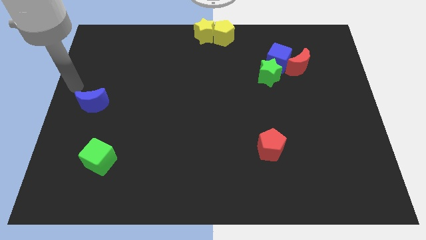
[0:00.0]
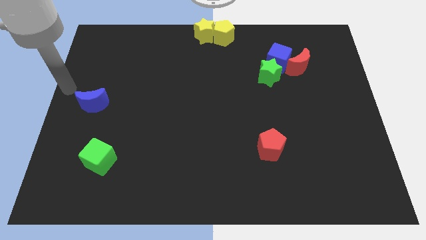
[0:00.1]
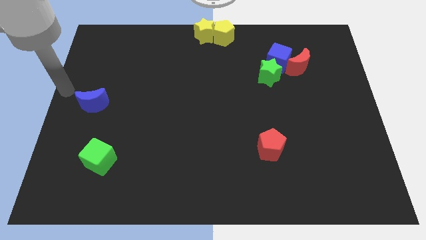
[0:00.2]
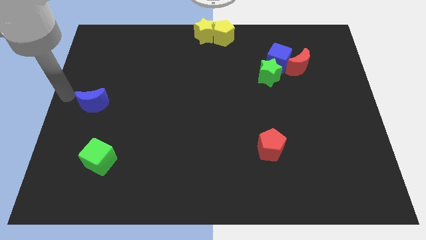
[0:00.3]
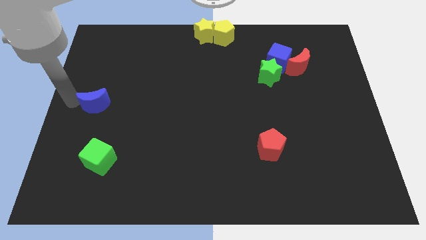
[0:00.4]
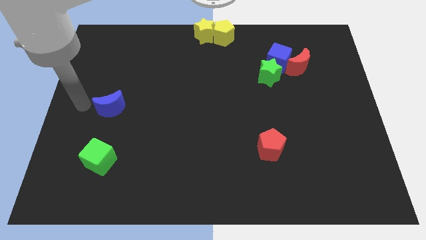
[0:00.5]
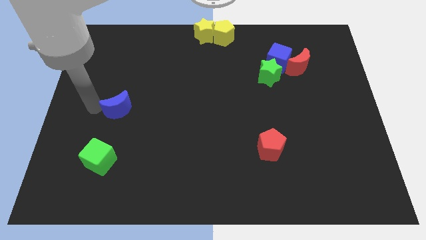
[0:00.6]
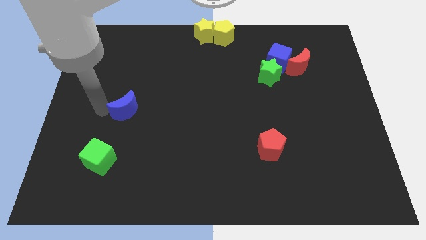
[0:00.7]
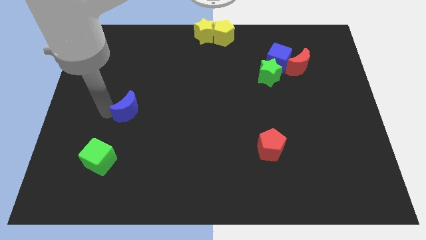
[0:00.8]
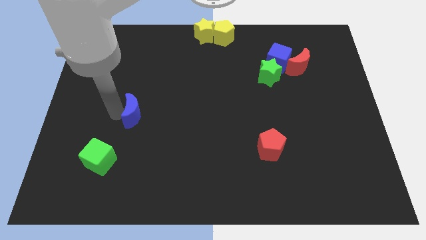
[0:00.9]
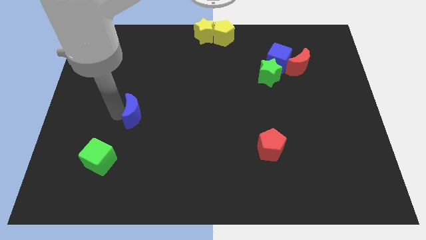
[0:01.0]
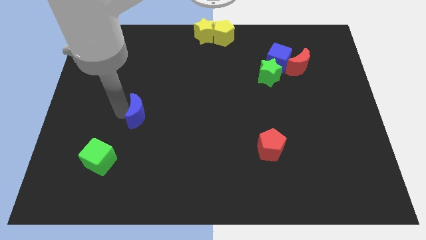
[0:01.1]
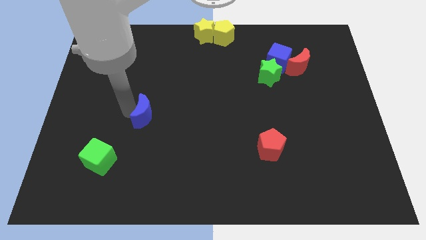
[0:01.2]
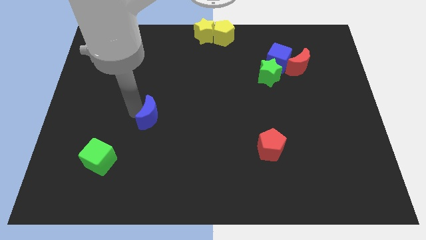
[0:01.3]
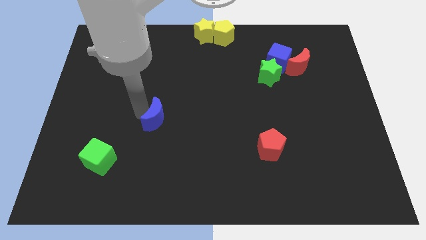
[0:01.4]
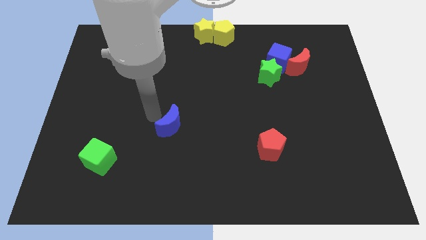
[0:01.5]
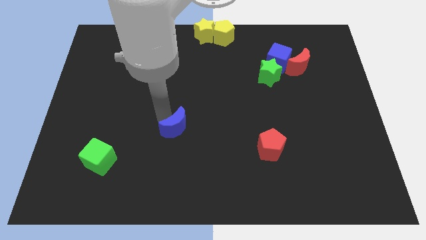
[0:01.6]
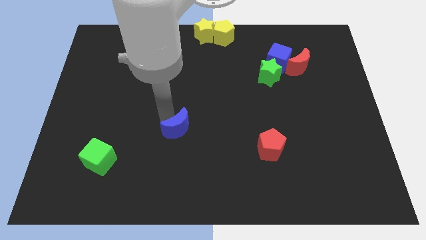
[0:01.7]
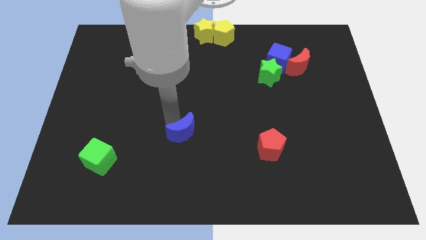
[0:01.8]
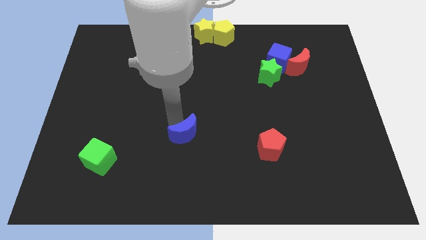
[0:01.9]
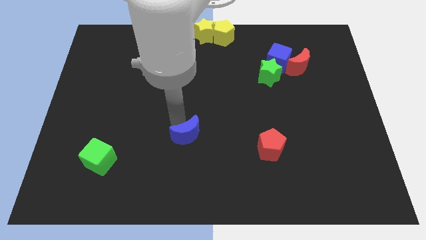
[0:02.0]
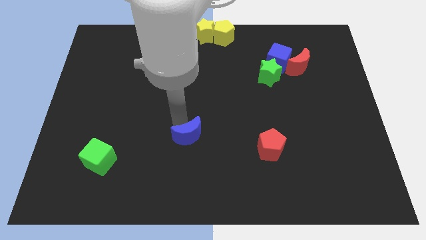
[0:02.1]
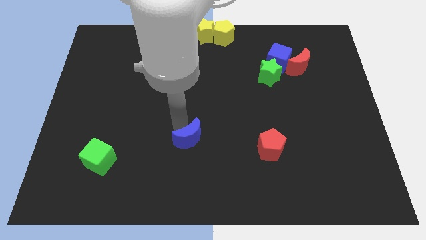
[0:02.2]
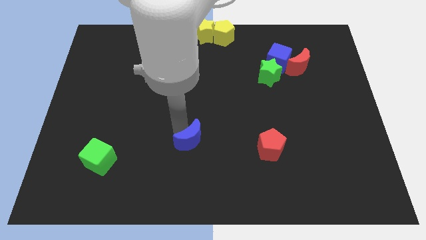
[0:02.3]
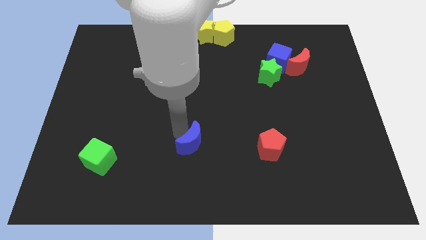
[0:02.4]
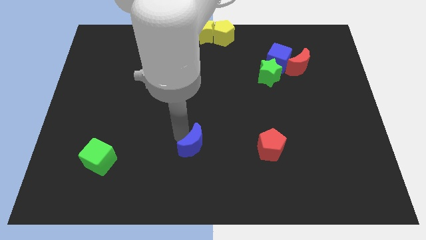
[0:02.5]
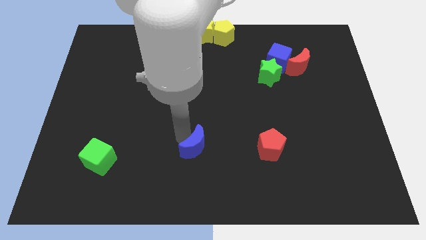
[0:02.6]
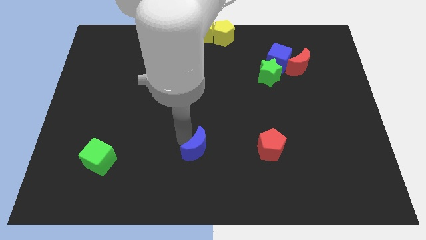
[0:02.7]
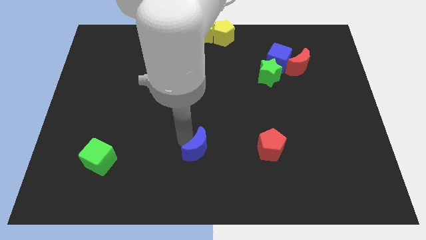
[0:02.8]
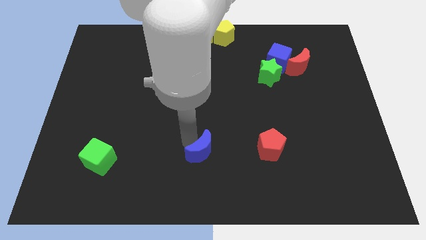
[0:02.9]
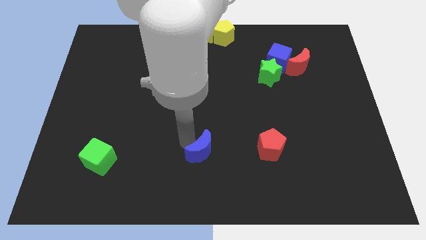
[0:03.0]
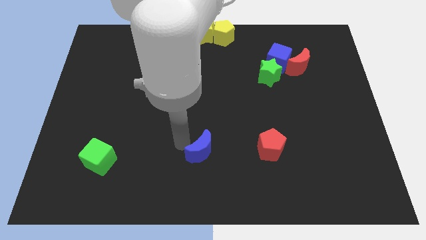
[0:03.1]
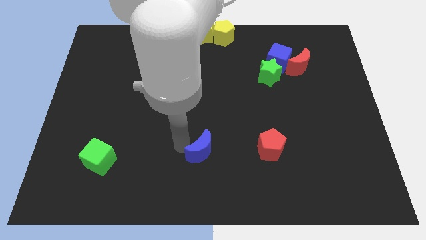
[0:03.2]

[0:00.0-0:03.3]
place blue crescent parallel left to red pentagon

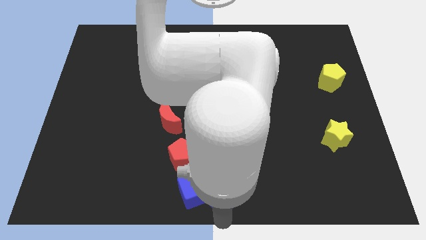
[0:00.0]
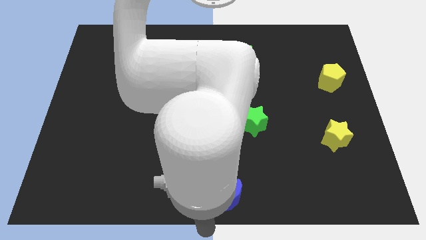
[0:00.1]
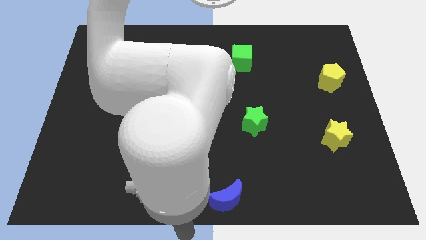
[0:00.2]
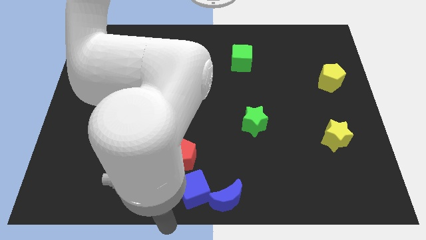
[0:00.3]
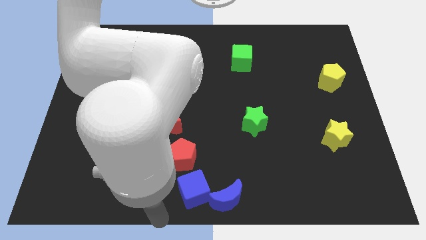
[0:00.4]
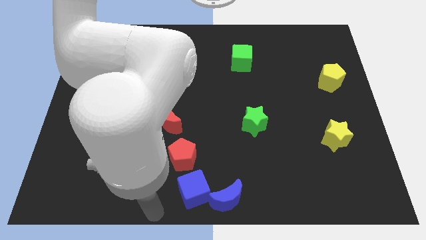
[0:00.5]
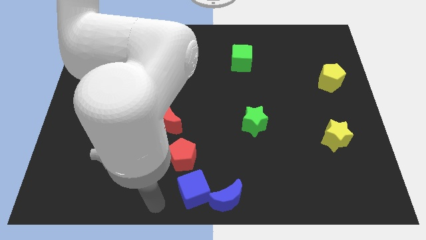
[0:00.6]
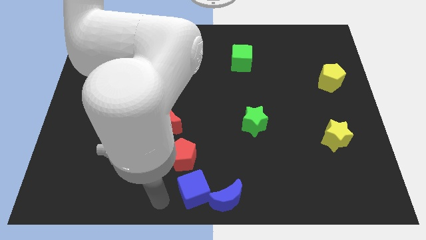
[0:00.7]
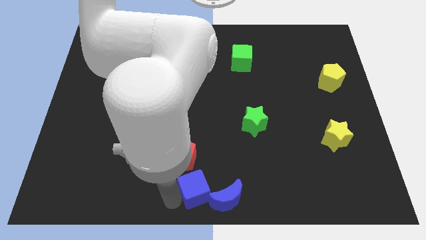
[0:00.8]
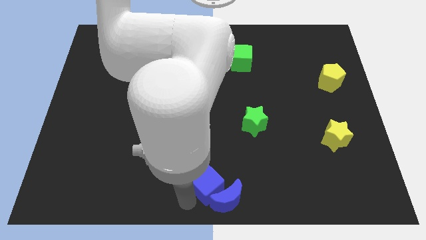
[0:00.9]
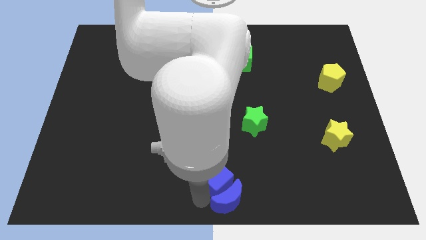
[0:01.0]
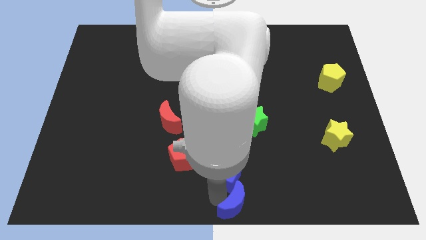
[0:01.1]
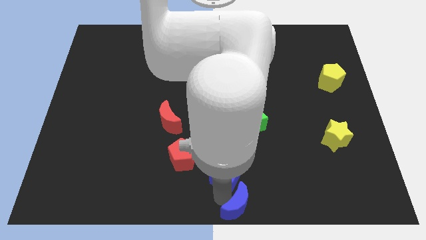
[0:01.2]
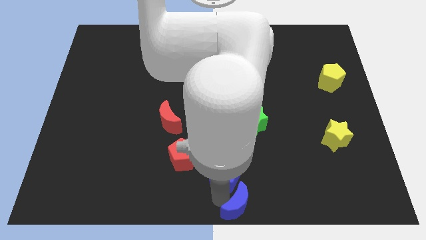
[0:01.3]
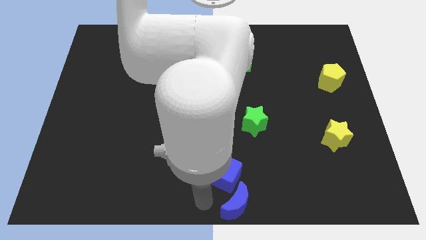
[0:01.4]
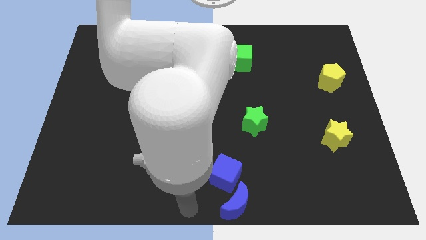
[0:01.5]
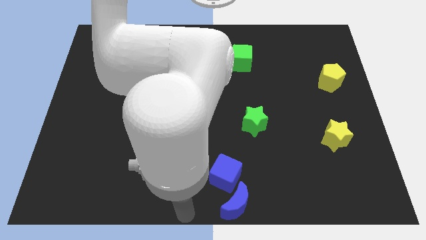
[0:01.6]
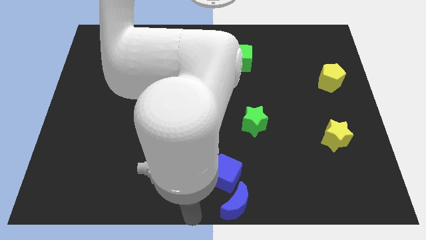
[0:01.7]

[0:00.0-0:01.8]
move the blue blocks to the center bottom

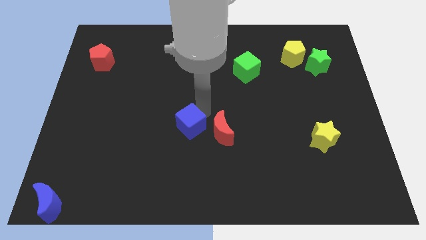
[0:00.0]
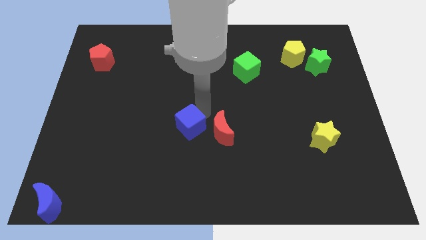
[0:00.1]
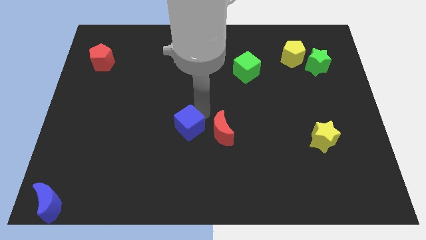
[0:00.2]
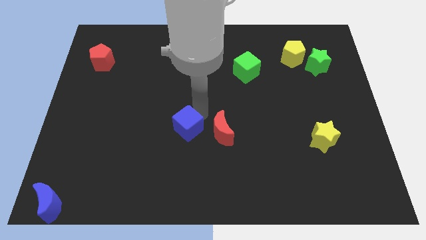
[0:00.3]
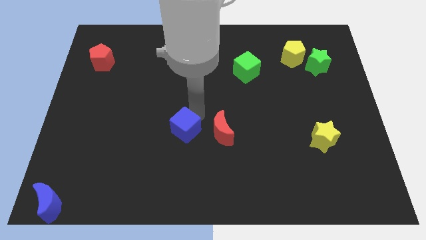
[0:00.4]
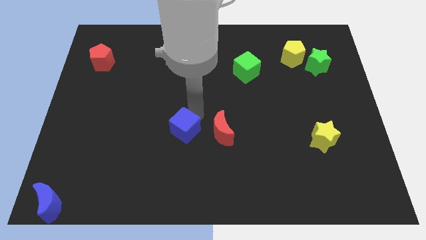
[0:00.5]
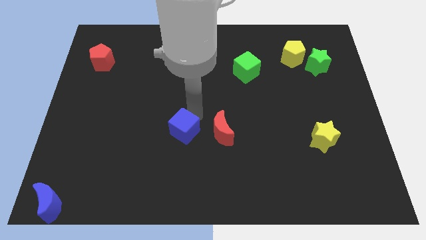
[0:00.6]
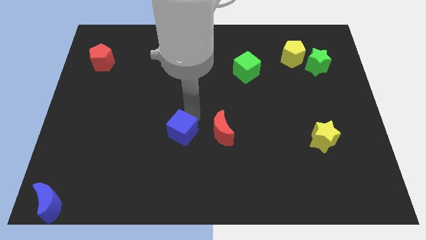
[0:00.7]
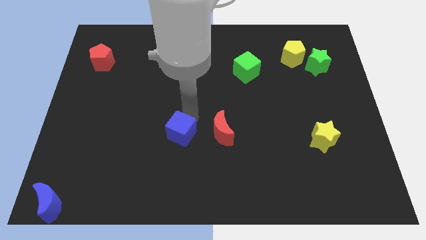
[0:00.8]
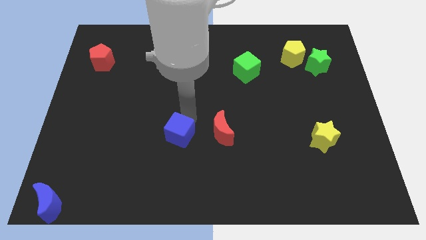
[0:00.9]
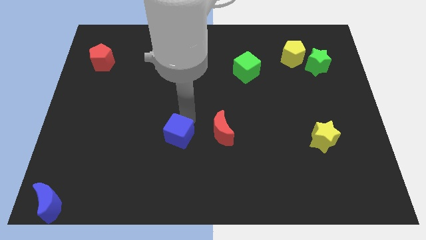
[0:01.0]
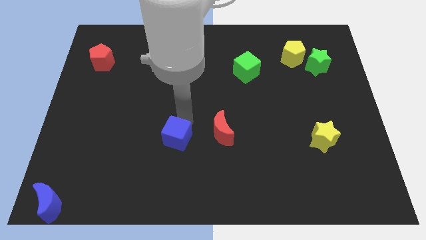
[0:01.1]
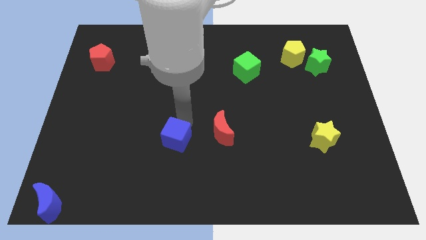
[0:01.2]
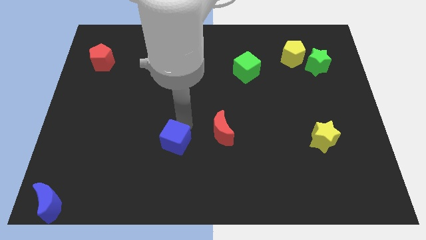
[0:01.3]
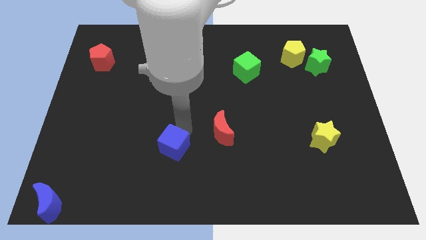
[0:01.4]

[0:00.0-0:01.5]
seperate blue cube and red moon

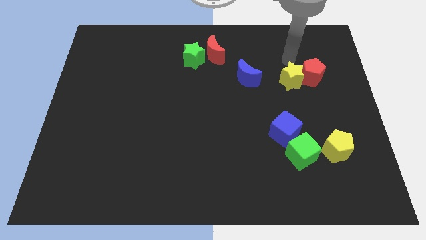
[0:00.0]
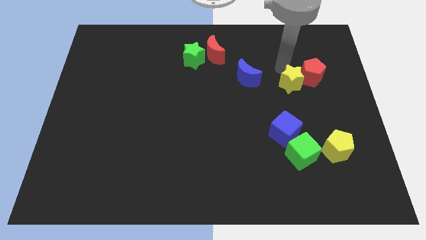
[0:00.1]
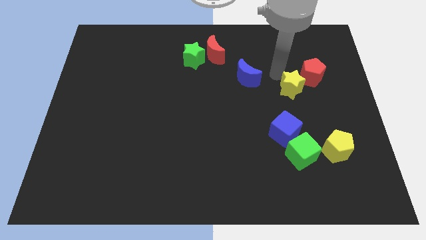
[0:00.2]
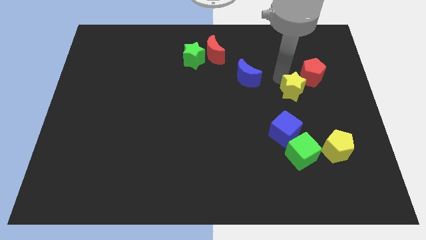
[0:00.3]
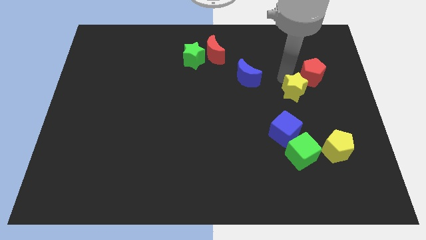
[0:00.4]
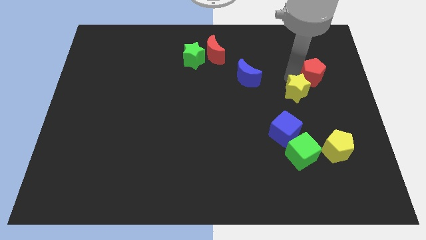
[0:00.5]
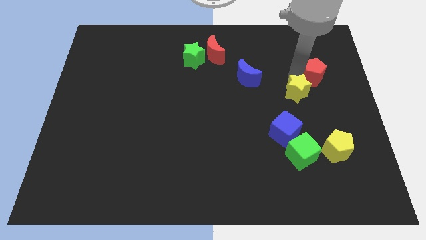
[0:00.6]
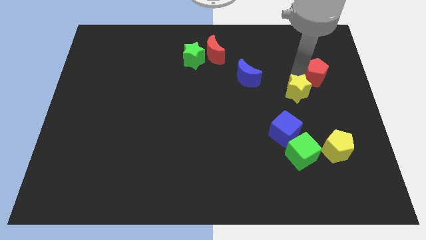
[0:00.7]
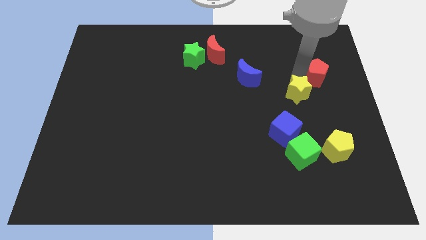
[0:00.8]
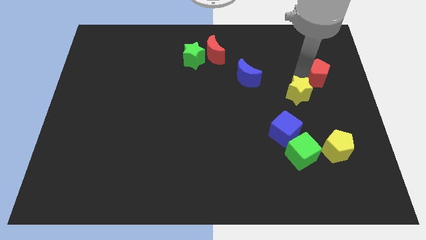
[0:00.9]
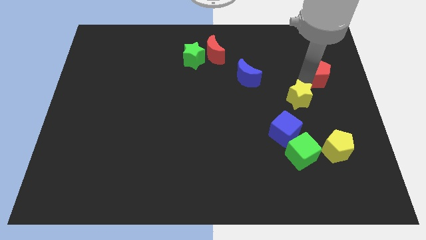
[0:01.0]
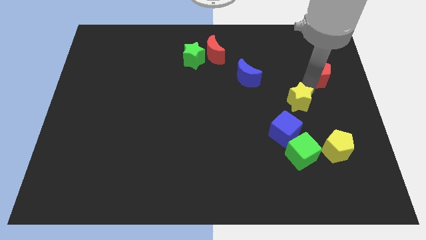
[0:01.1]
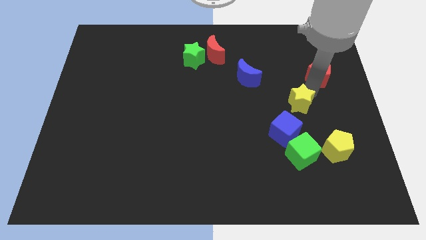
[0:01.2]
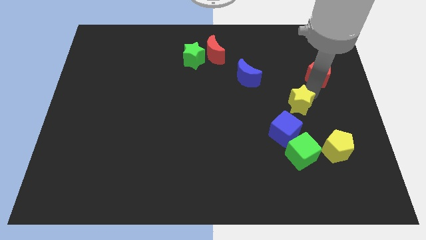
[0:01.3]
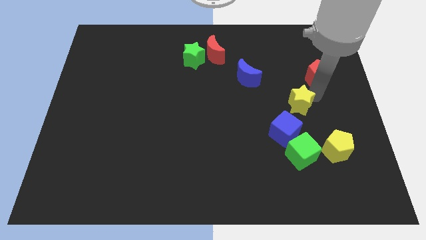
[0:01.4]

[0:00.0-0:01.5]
place yellow star between the red pentagon and blue cube

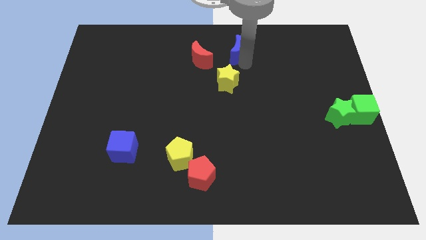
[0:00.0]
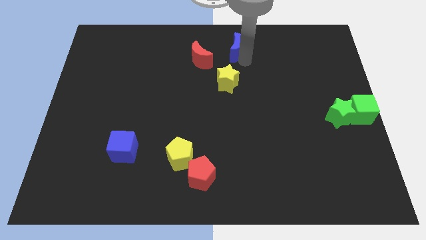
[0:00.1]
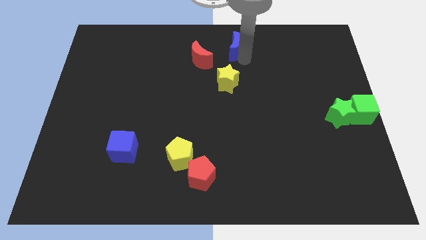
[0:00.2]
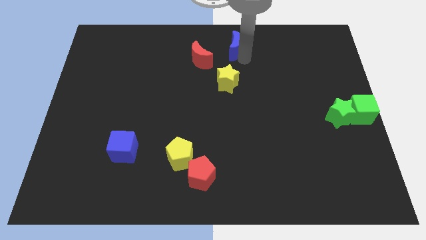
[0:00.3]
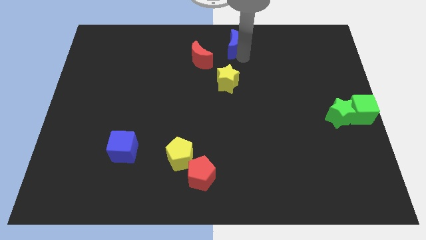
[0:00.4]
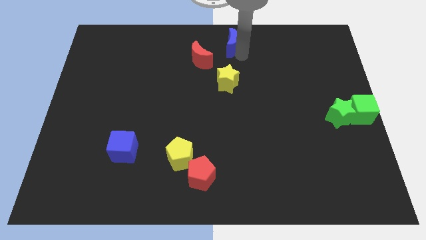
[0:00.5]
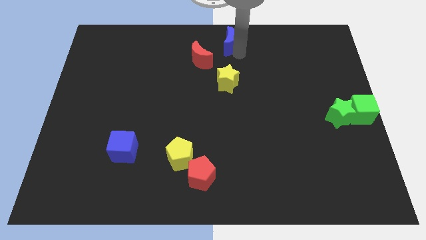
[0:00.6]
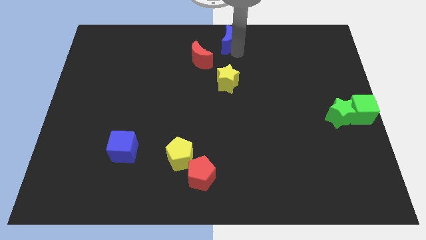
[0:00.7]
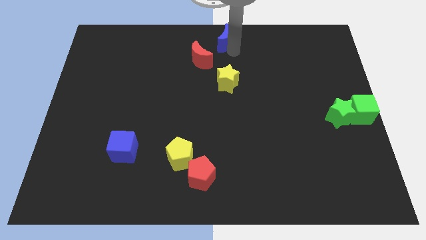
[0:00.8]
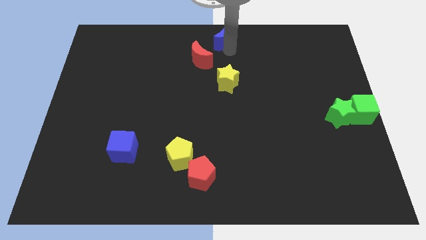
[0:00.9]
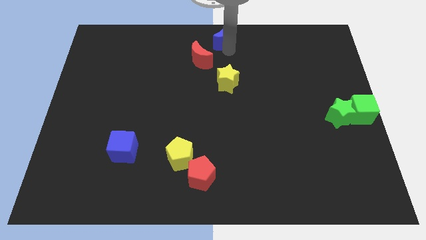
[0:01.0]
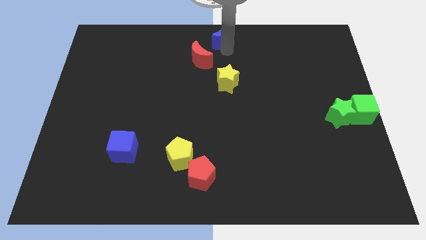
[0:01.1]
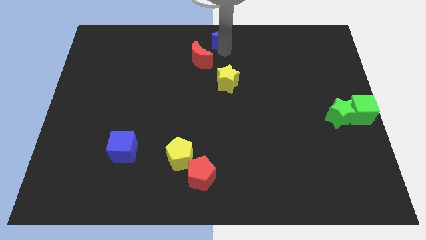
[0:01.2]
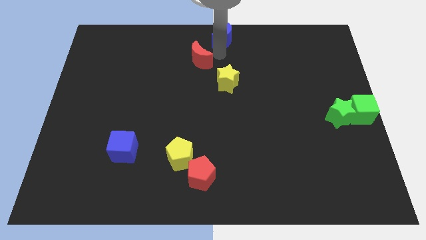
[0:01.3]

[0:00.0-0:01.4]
put the blue moon at the top center of the board
